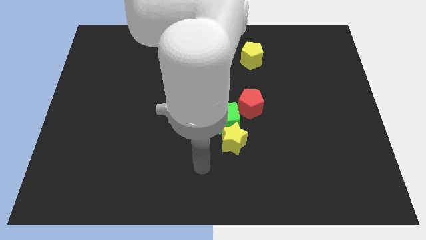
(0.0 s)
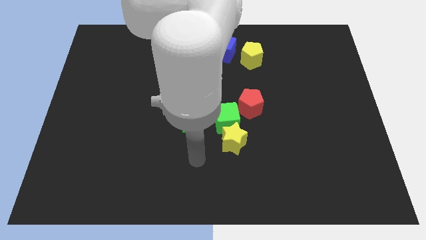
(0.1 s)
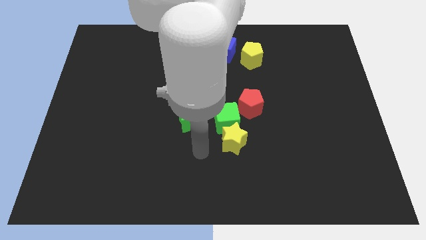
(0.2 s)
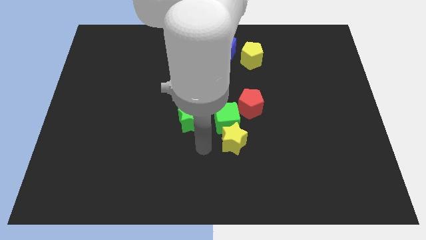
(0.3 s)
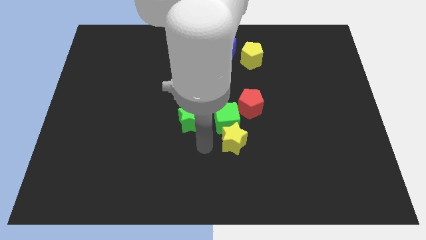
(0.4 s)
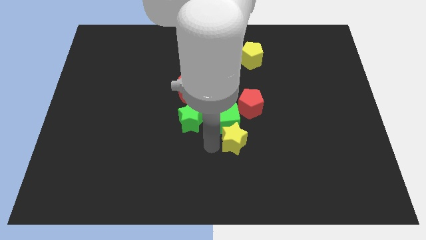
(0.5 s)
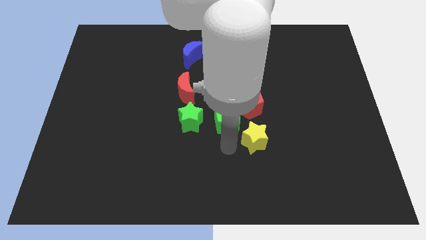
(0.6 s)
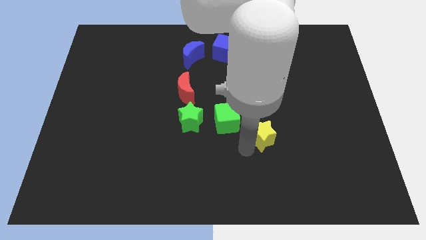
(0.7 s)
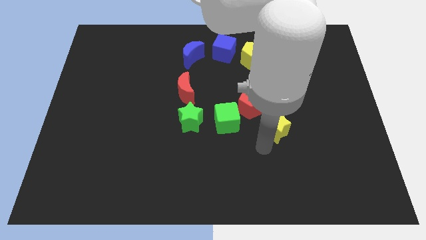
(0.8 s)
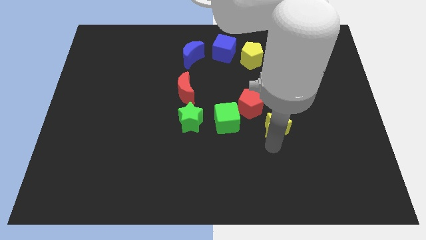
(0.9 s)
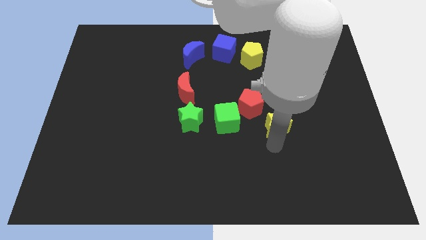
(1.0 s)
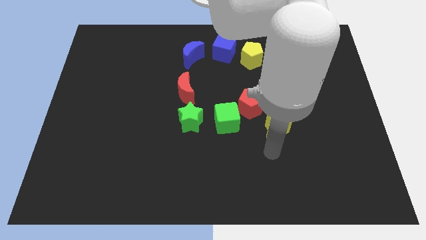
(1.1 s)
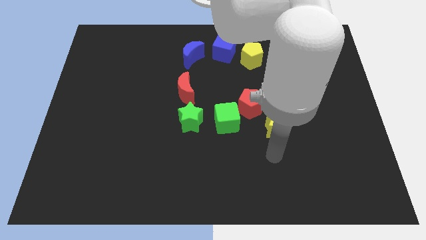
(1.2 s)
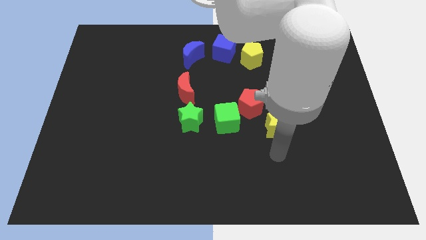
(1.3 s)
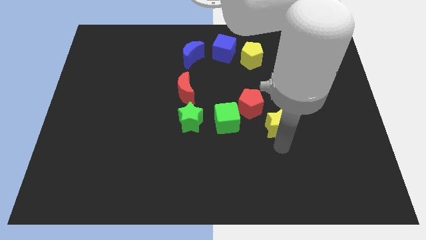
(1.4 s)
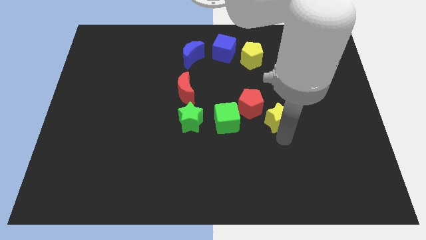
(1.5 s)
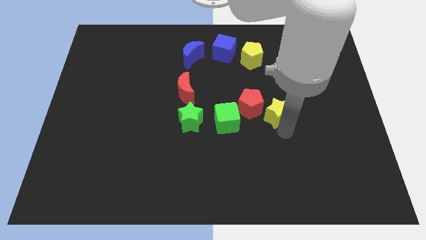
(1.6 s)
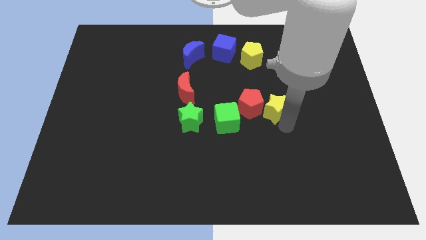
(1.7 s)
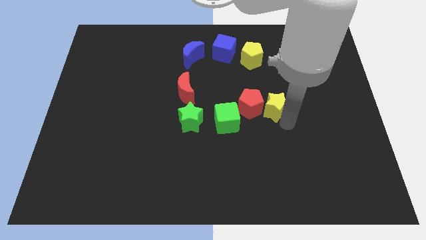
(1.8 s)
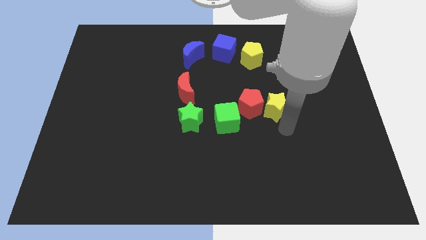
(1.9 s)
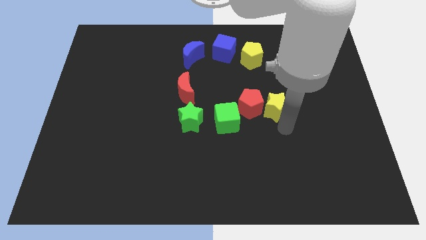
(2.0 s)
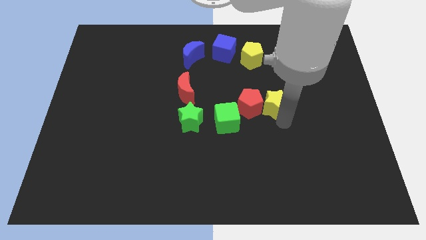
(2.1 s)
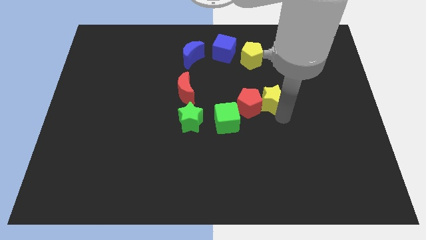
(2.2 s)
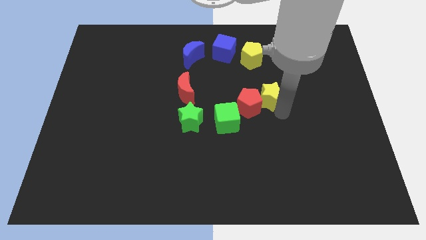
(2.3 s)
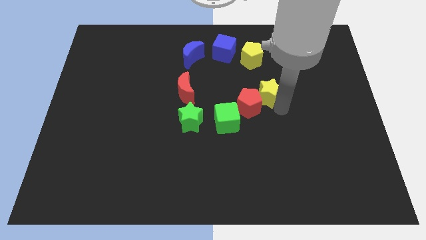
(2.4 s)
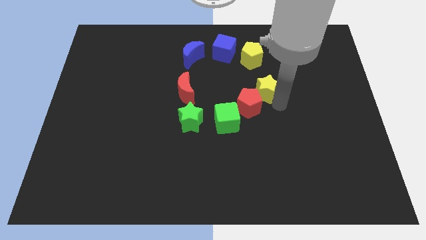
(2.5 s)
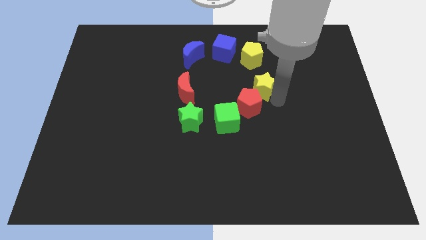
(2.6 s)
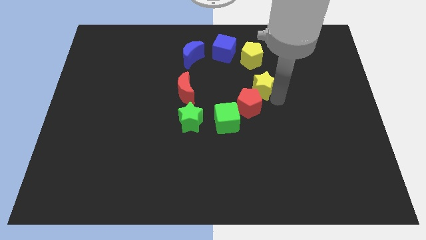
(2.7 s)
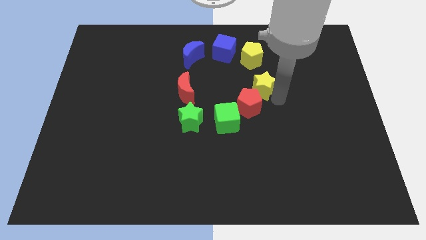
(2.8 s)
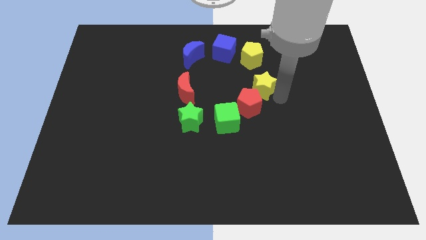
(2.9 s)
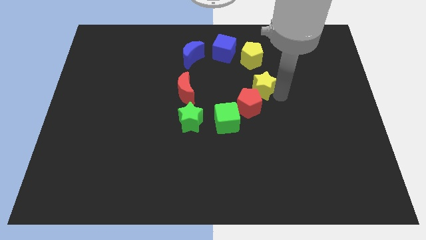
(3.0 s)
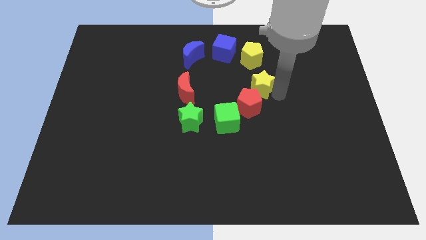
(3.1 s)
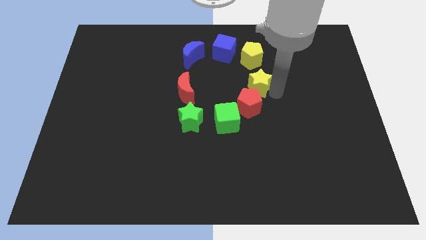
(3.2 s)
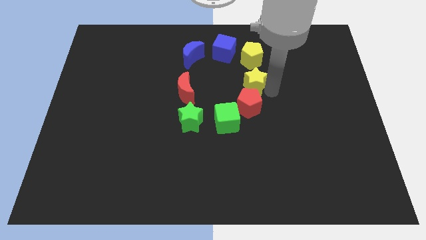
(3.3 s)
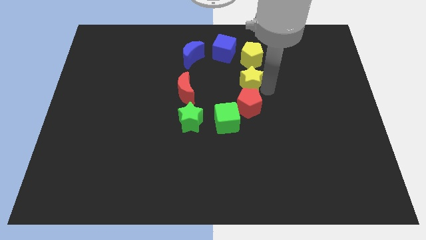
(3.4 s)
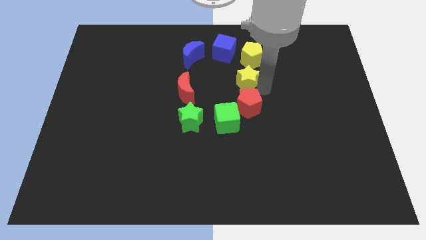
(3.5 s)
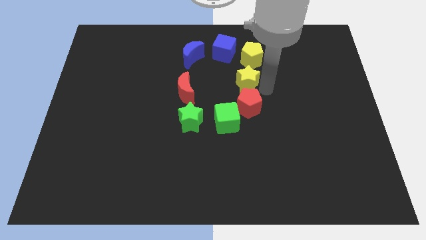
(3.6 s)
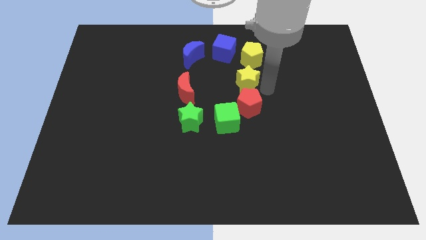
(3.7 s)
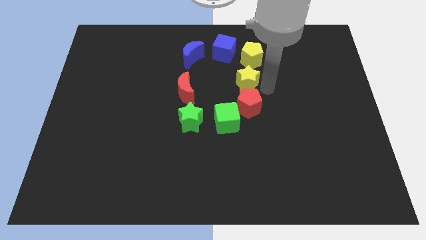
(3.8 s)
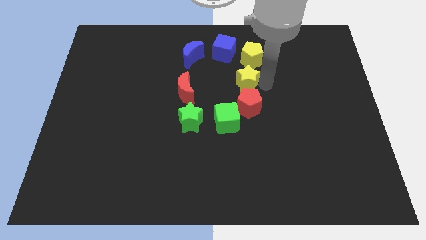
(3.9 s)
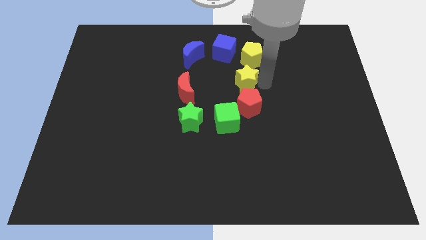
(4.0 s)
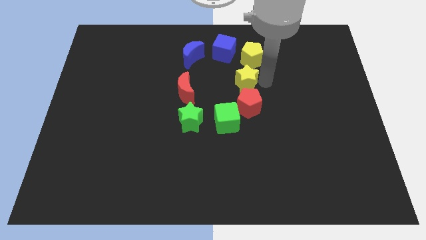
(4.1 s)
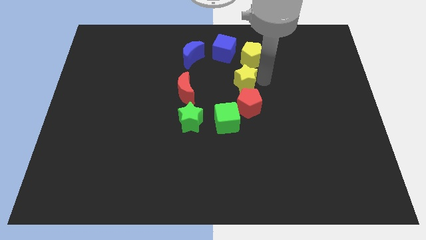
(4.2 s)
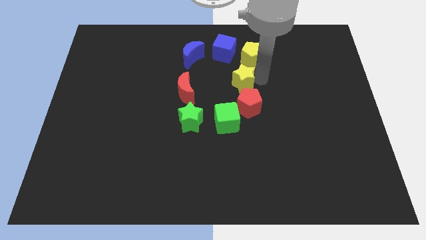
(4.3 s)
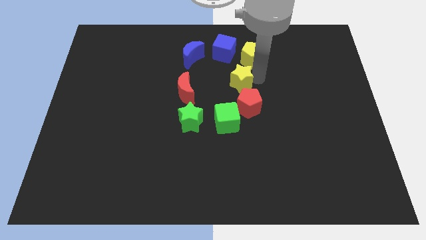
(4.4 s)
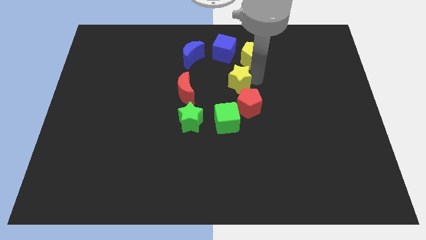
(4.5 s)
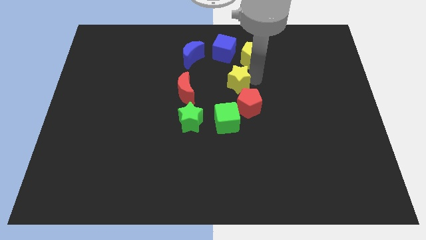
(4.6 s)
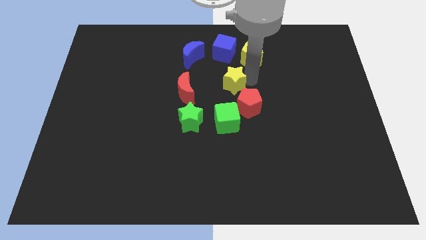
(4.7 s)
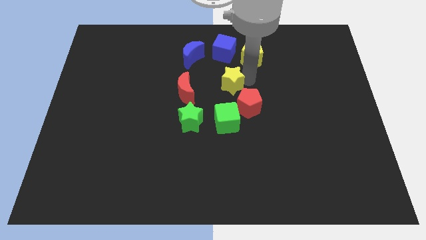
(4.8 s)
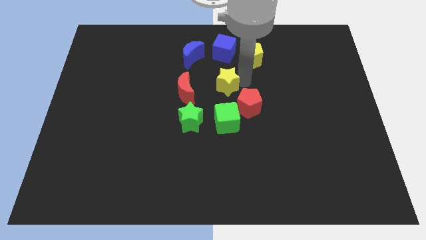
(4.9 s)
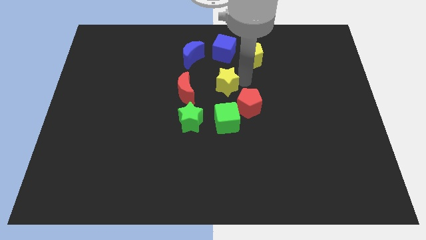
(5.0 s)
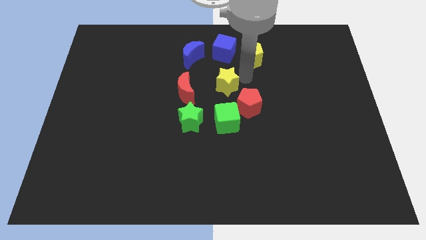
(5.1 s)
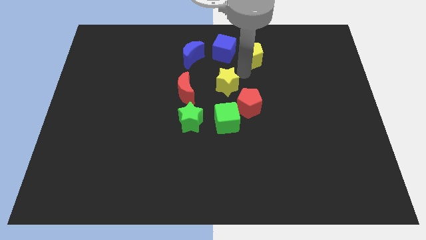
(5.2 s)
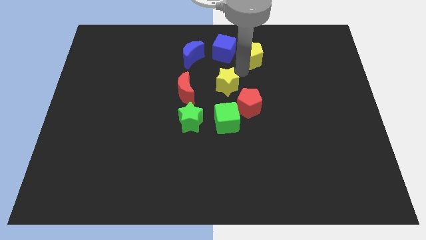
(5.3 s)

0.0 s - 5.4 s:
push the yellow star to the center of the board

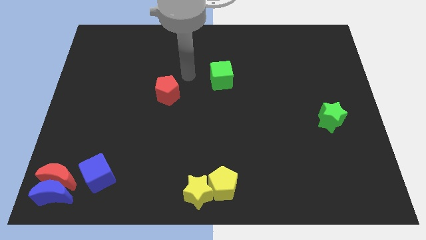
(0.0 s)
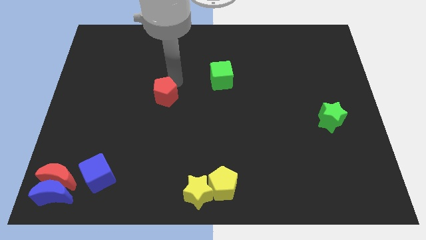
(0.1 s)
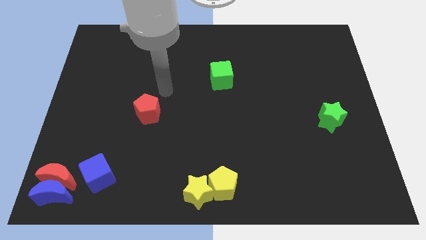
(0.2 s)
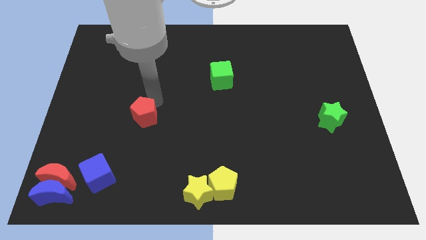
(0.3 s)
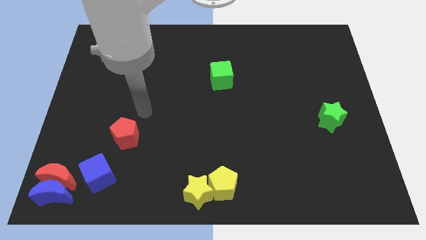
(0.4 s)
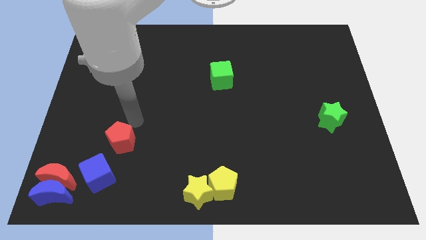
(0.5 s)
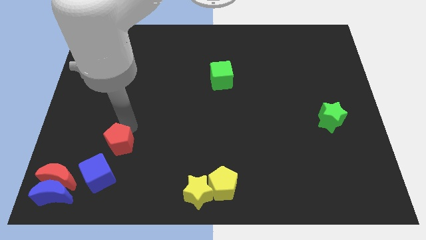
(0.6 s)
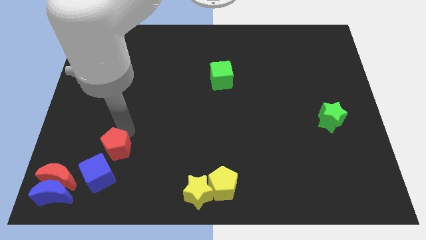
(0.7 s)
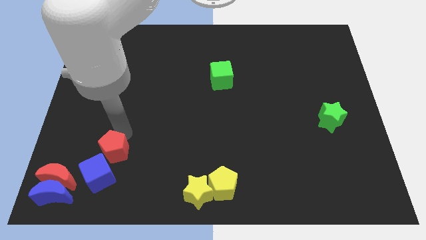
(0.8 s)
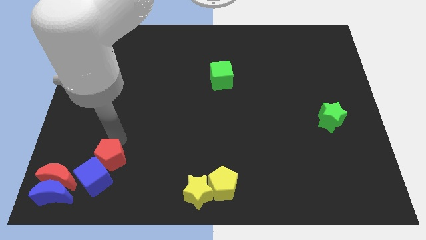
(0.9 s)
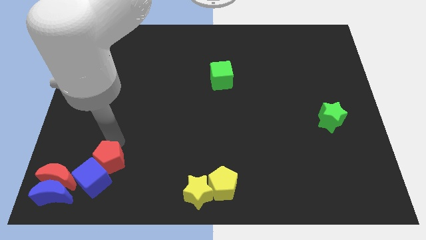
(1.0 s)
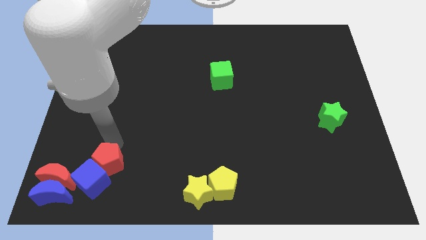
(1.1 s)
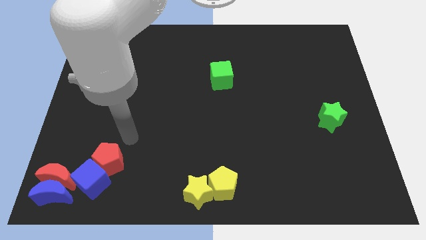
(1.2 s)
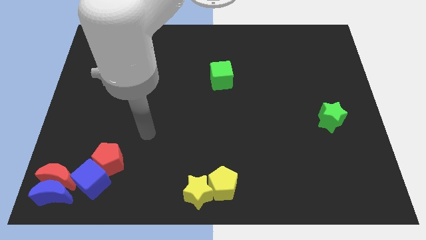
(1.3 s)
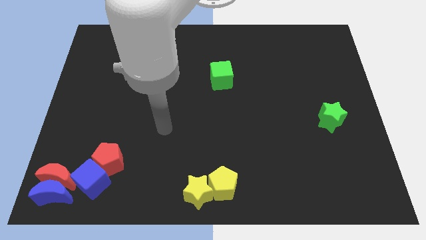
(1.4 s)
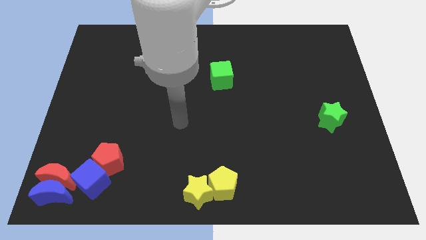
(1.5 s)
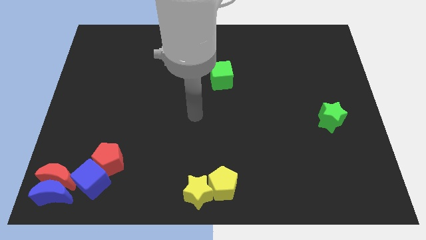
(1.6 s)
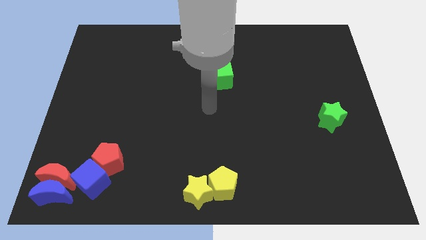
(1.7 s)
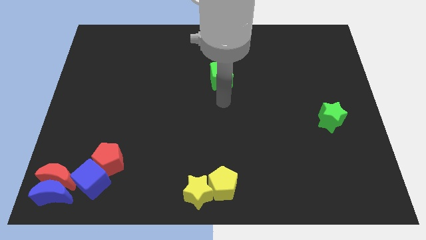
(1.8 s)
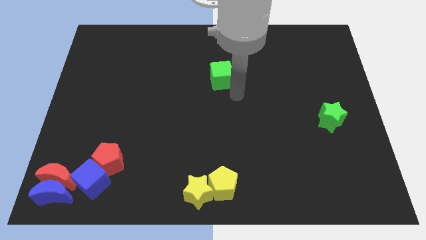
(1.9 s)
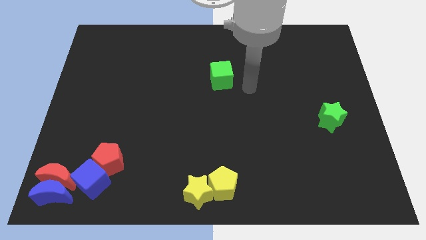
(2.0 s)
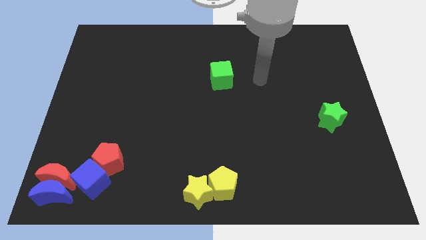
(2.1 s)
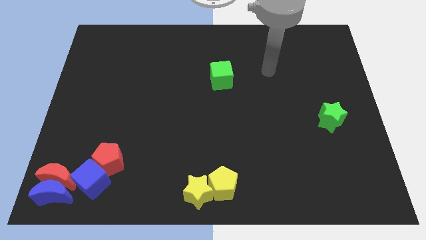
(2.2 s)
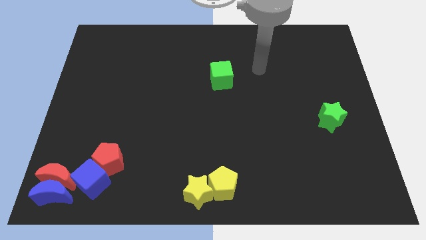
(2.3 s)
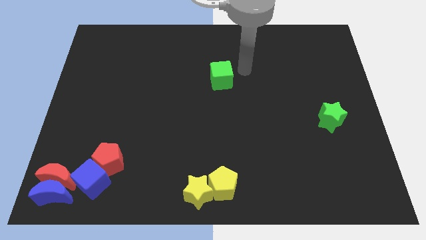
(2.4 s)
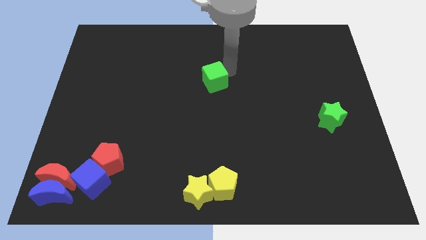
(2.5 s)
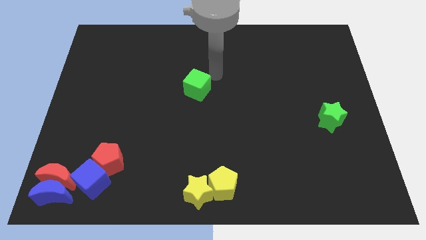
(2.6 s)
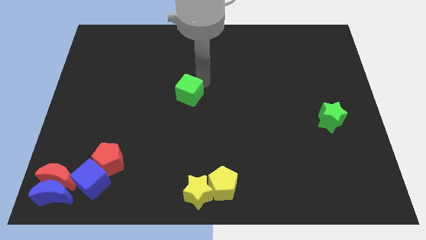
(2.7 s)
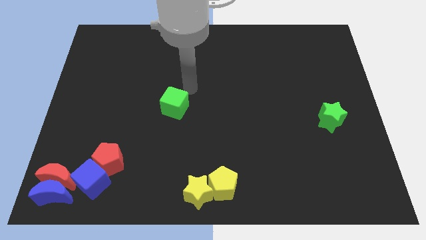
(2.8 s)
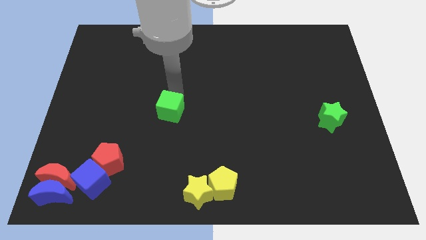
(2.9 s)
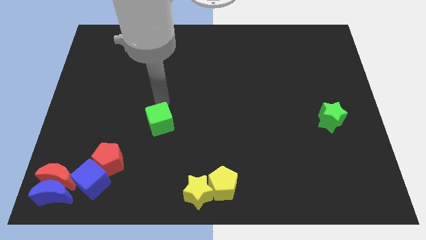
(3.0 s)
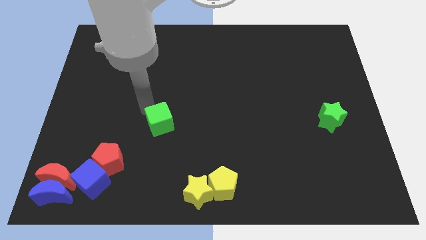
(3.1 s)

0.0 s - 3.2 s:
push green cube downwards

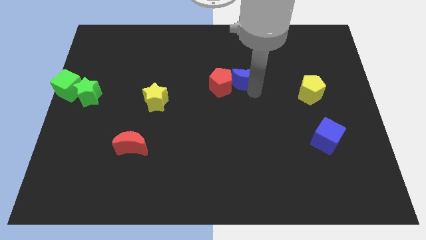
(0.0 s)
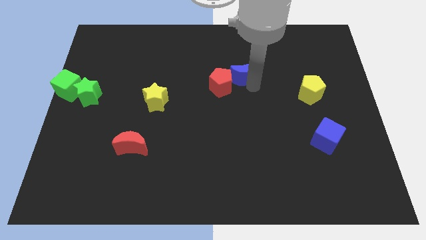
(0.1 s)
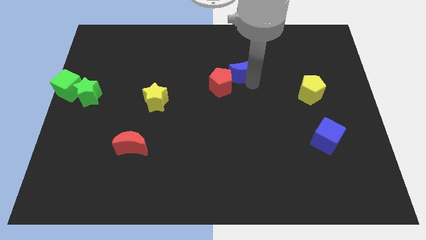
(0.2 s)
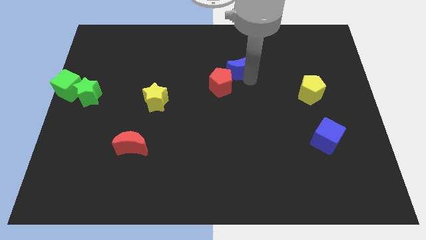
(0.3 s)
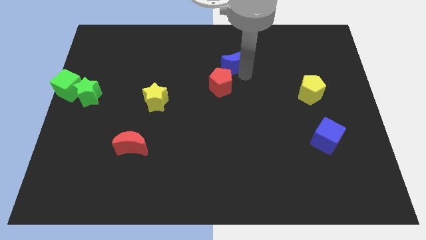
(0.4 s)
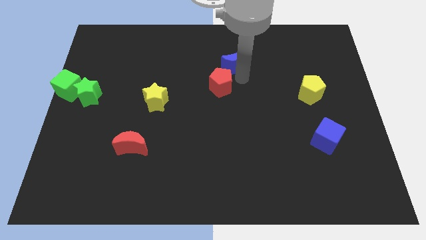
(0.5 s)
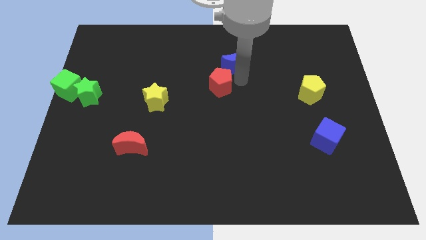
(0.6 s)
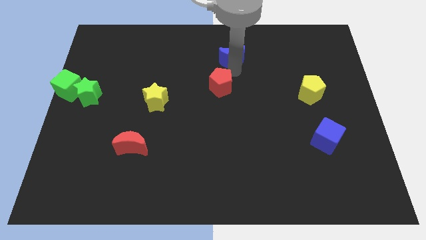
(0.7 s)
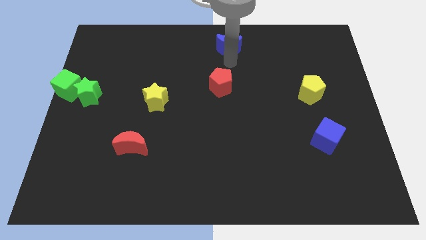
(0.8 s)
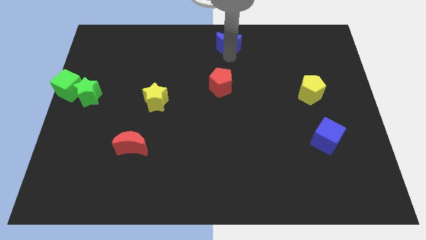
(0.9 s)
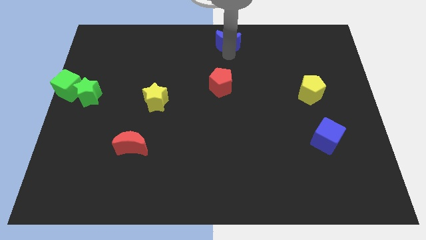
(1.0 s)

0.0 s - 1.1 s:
move the blue crescent to the top of the red pentagon
